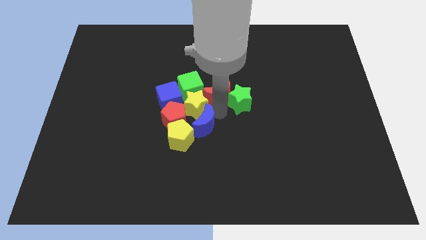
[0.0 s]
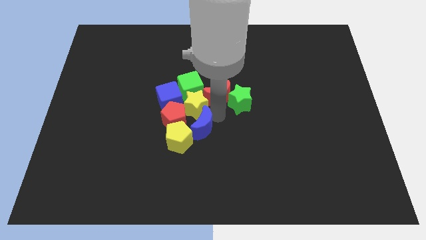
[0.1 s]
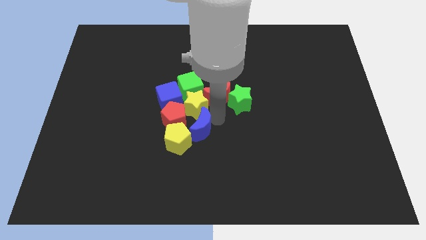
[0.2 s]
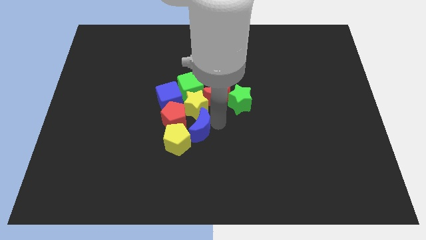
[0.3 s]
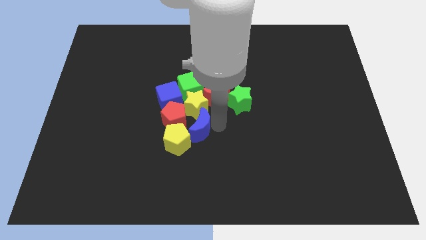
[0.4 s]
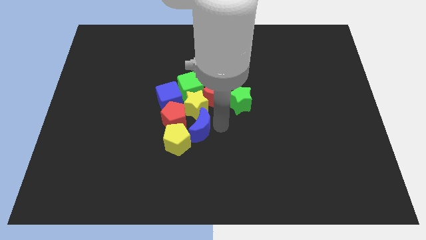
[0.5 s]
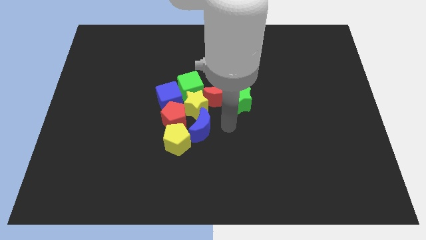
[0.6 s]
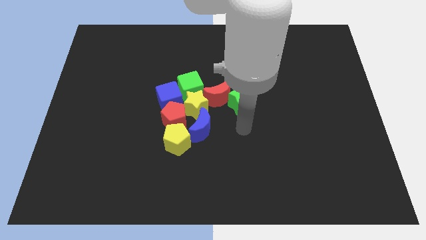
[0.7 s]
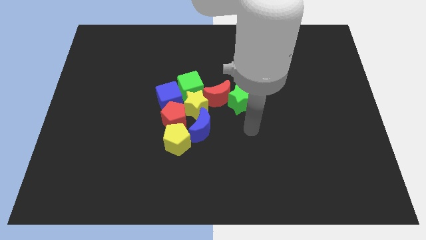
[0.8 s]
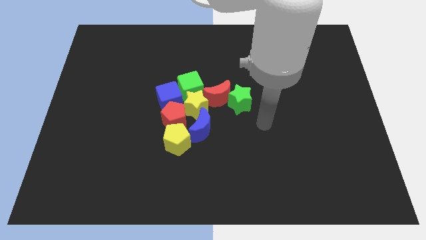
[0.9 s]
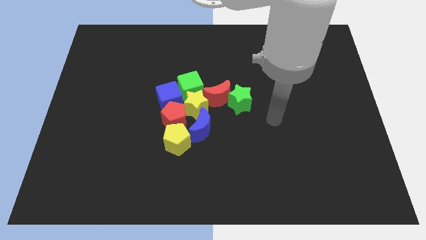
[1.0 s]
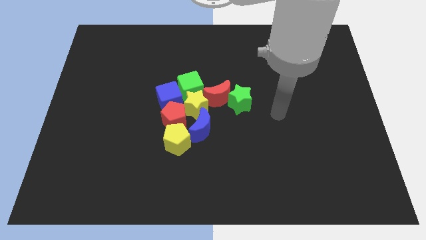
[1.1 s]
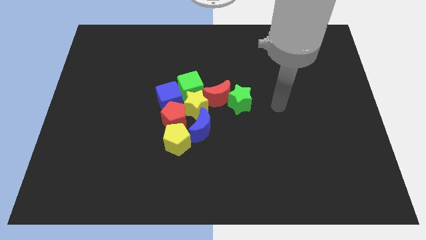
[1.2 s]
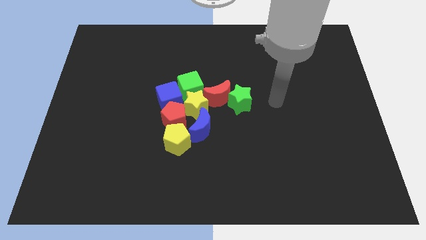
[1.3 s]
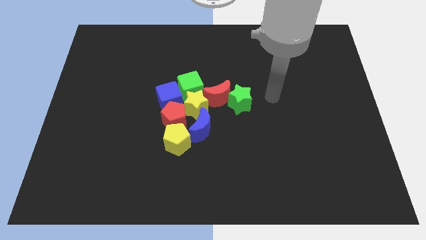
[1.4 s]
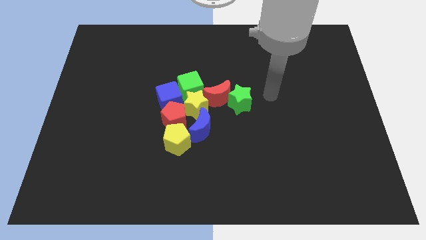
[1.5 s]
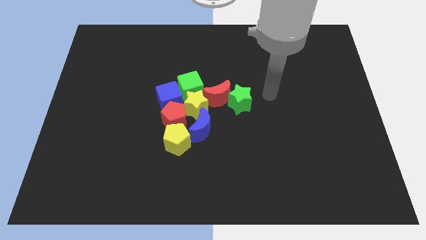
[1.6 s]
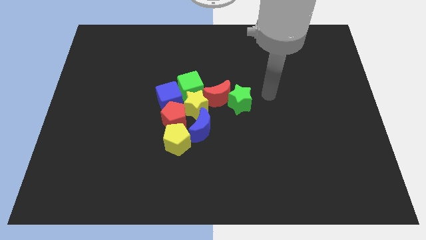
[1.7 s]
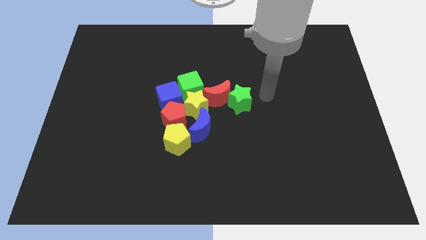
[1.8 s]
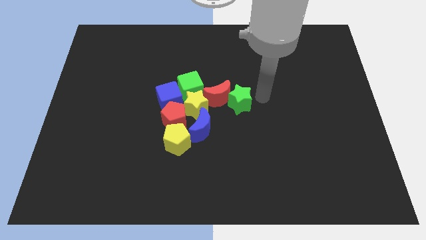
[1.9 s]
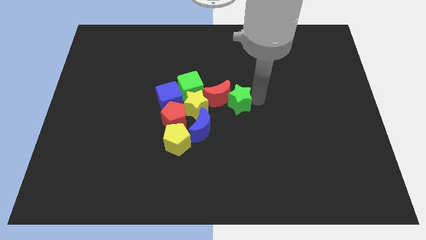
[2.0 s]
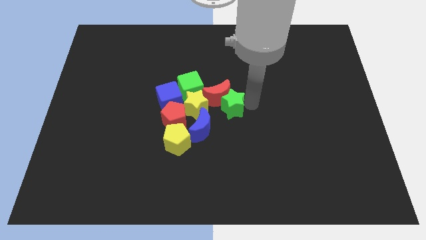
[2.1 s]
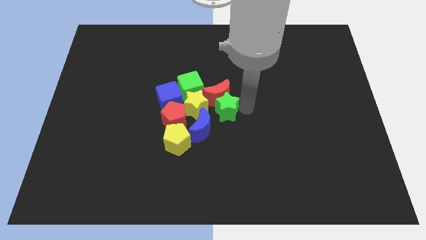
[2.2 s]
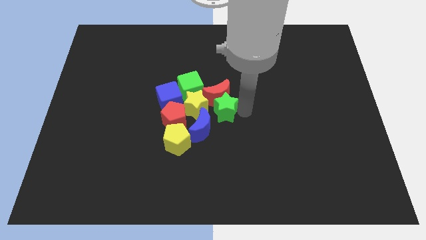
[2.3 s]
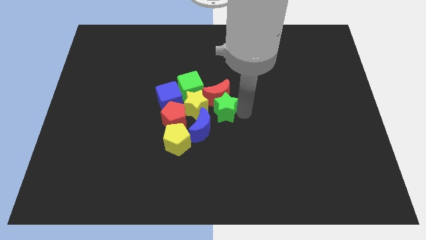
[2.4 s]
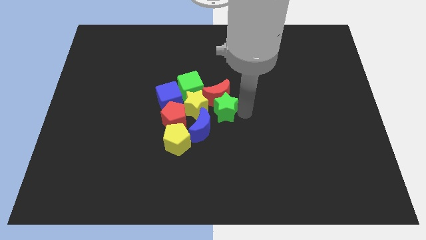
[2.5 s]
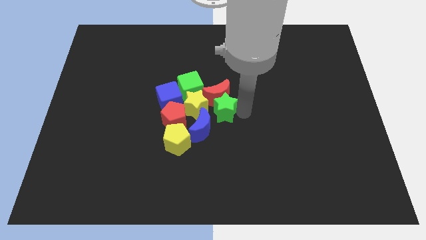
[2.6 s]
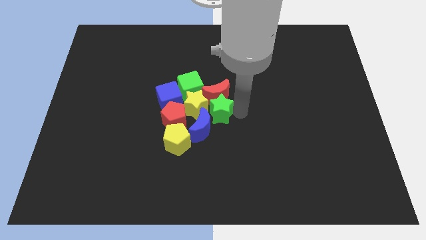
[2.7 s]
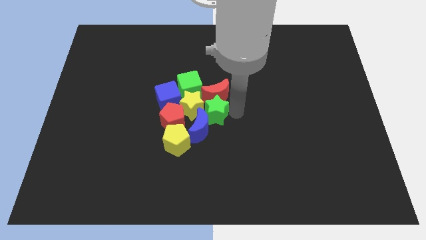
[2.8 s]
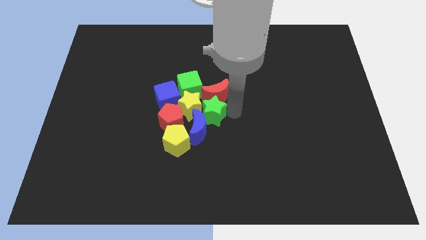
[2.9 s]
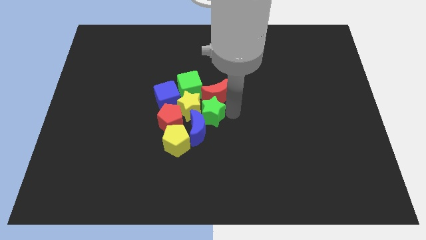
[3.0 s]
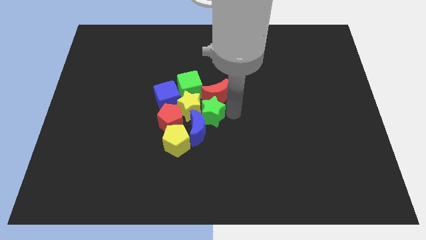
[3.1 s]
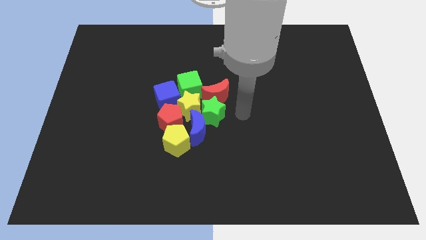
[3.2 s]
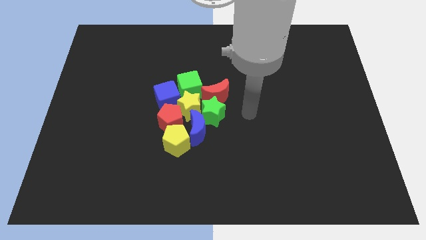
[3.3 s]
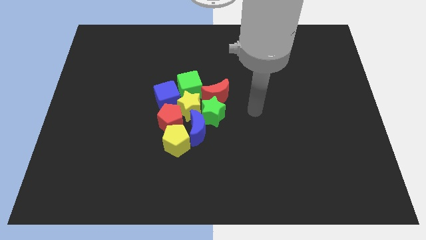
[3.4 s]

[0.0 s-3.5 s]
move the green cube to the bottom side of the red crescent

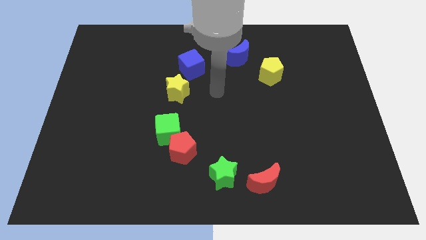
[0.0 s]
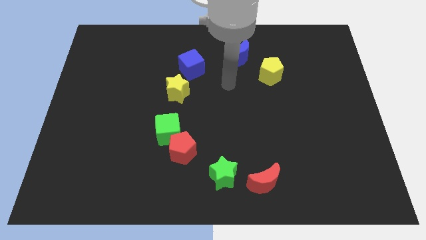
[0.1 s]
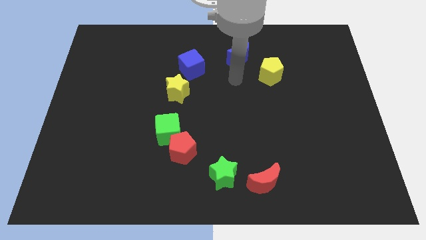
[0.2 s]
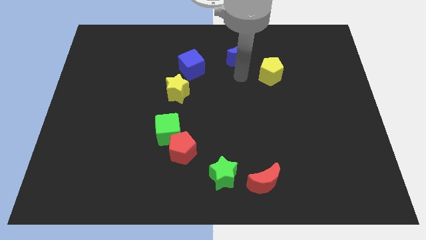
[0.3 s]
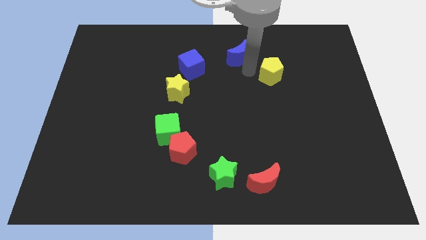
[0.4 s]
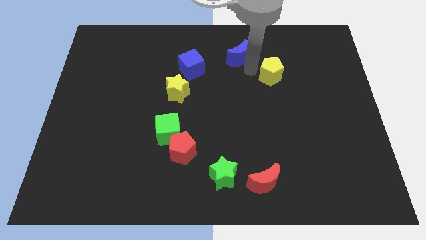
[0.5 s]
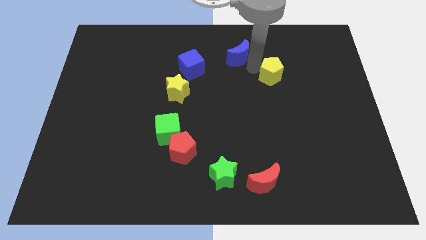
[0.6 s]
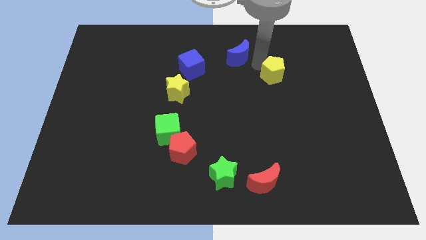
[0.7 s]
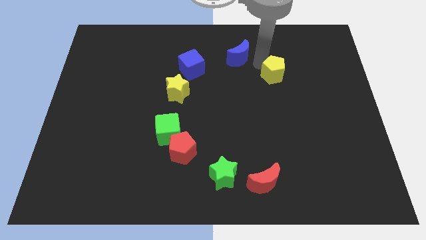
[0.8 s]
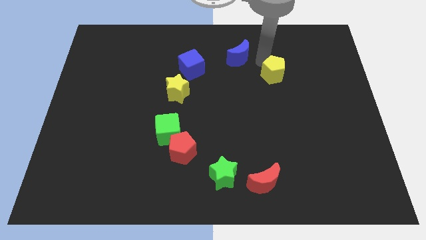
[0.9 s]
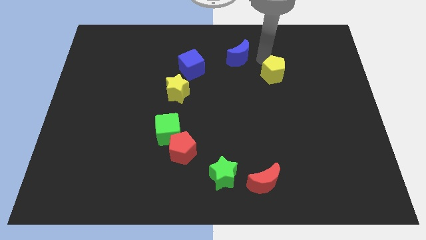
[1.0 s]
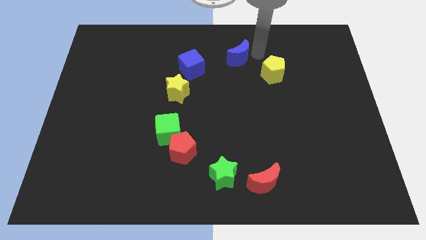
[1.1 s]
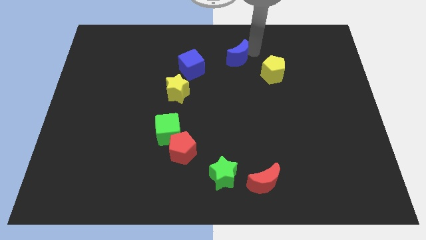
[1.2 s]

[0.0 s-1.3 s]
touch the left side of the yellow pentagon

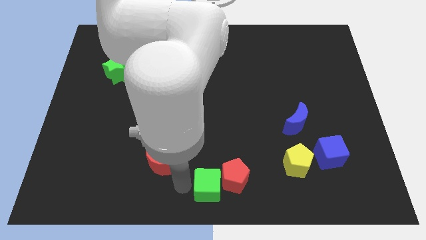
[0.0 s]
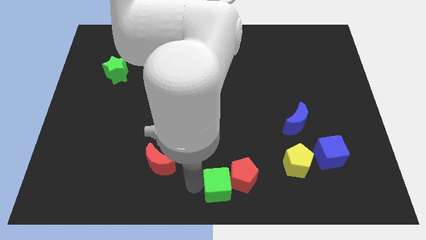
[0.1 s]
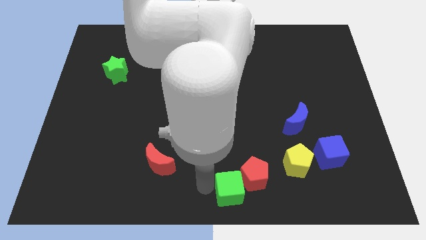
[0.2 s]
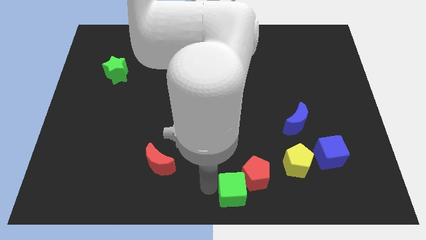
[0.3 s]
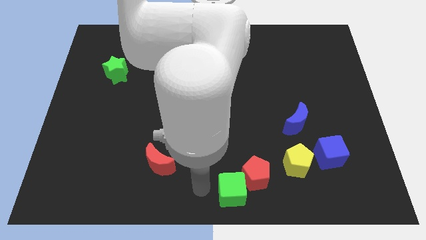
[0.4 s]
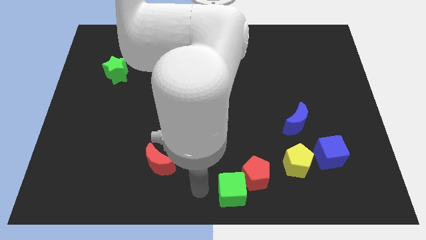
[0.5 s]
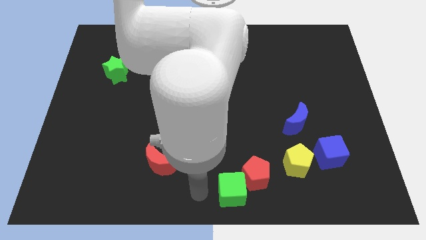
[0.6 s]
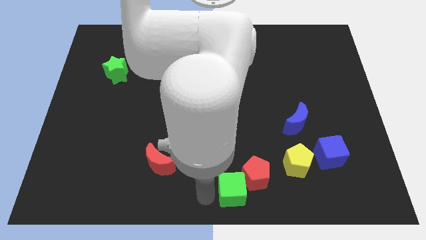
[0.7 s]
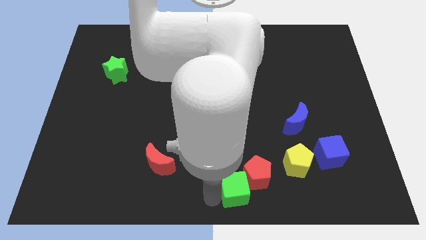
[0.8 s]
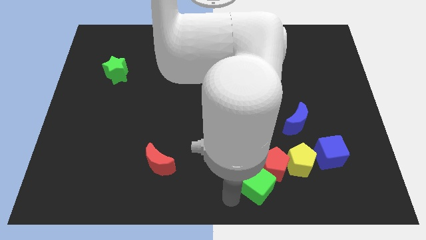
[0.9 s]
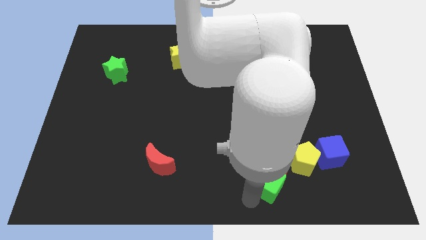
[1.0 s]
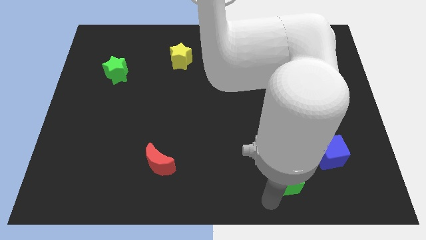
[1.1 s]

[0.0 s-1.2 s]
push the red pentagon with the green cube

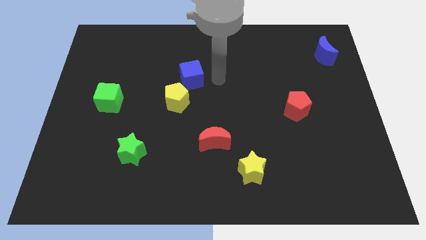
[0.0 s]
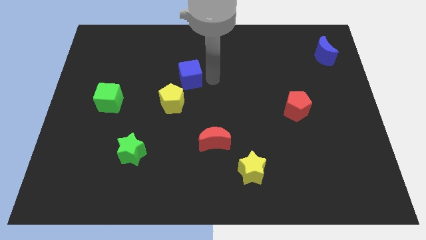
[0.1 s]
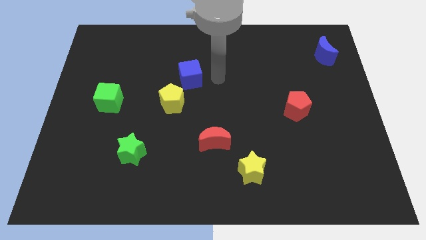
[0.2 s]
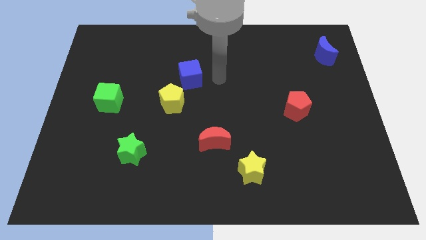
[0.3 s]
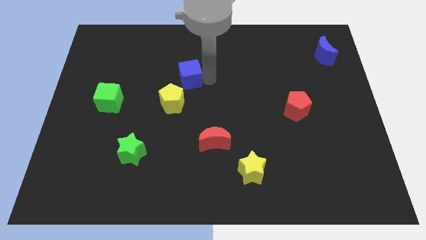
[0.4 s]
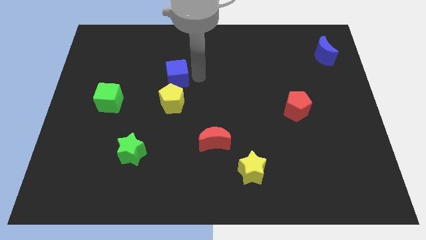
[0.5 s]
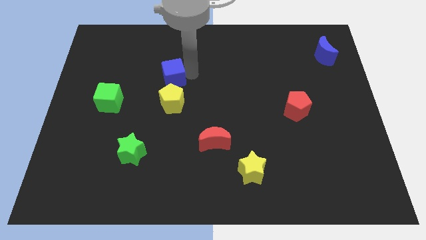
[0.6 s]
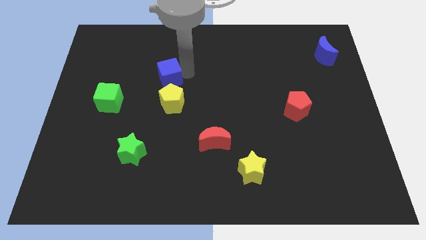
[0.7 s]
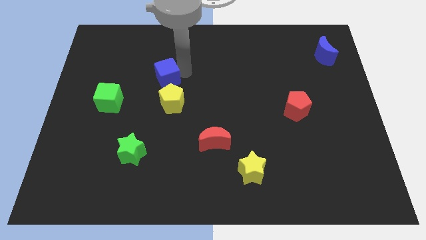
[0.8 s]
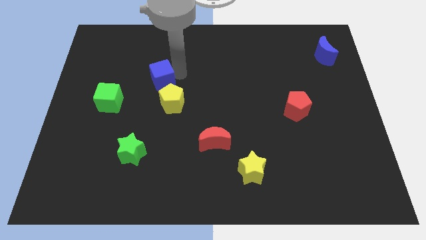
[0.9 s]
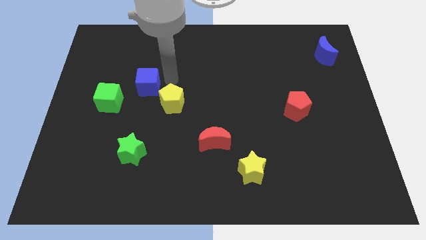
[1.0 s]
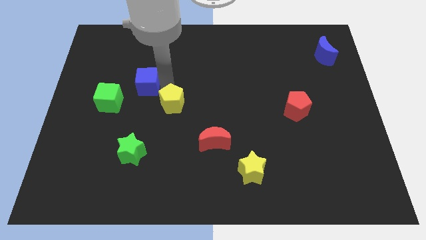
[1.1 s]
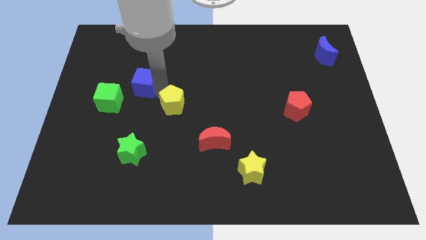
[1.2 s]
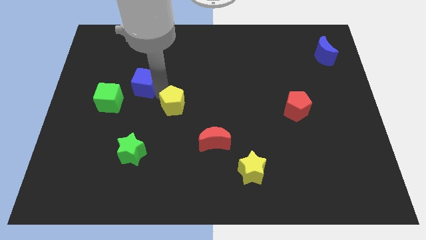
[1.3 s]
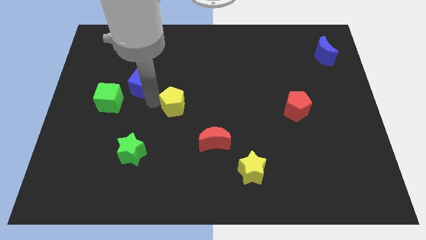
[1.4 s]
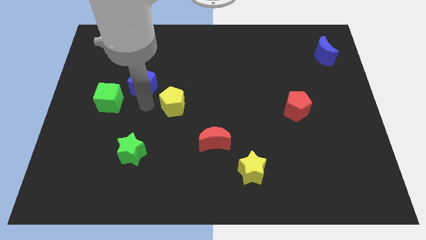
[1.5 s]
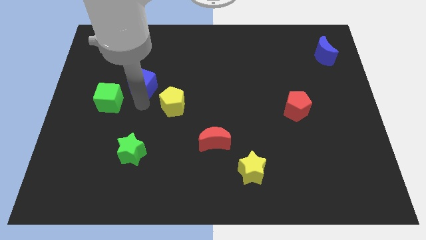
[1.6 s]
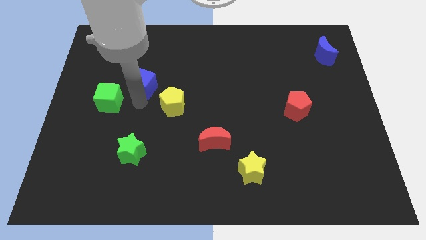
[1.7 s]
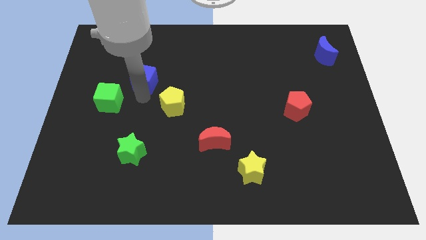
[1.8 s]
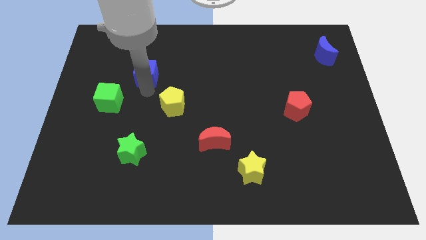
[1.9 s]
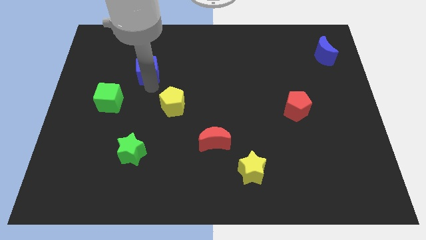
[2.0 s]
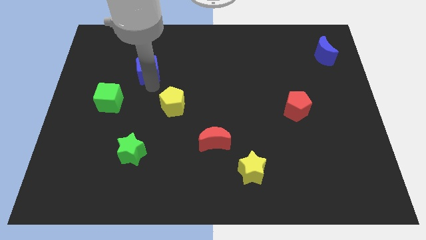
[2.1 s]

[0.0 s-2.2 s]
push the blue cube to the top left of the yellow pentagon

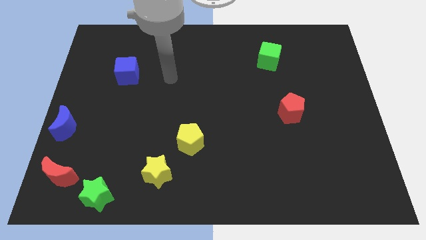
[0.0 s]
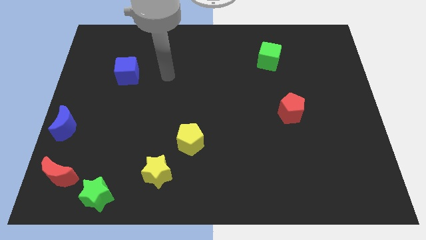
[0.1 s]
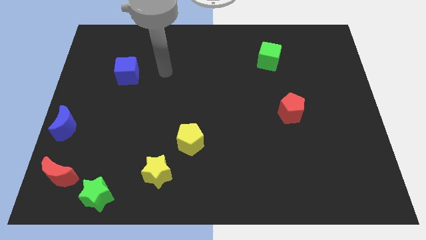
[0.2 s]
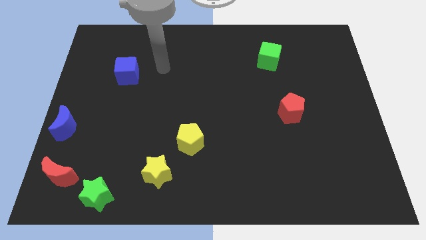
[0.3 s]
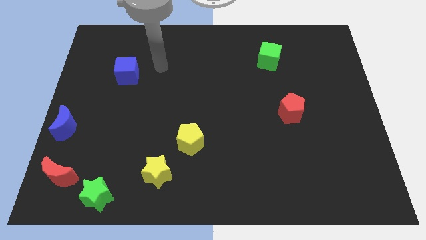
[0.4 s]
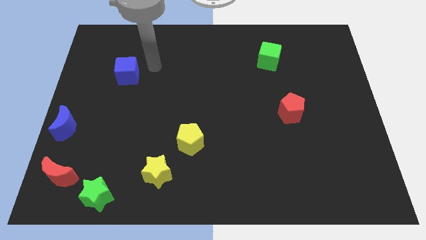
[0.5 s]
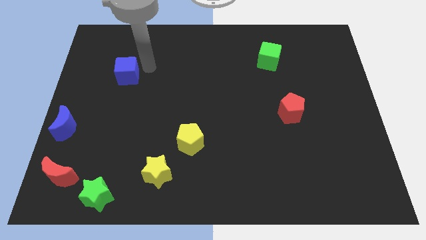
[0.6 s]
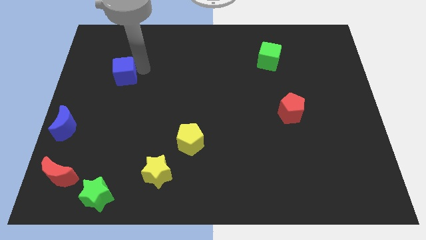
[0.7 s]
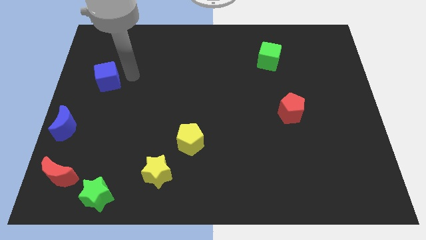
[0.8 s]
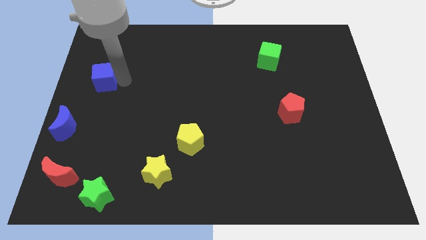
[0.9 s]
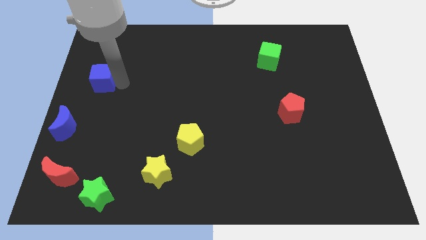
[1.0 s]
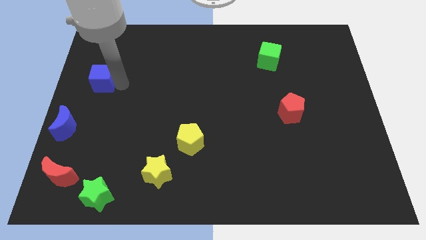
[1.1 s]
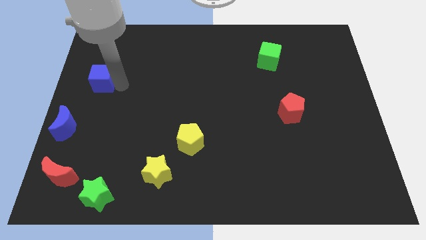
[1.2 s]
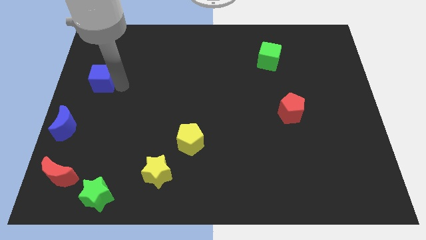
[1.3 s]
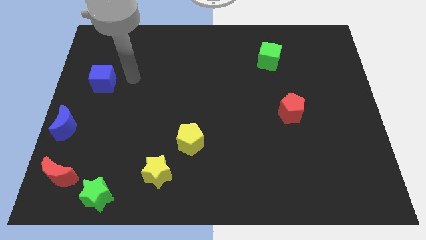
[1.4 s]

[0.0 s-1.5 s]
put the blue cube at the top side of the red crescent
